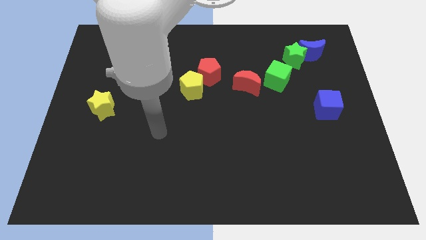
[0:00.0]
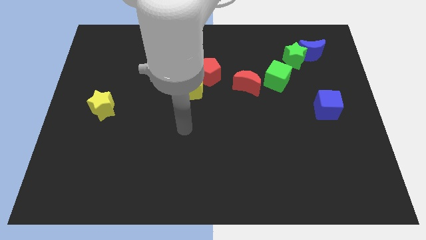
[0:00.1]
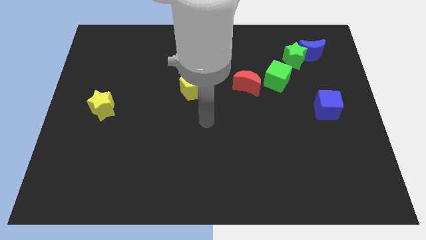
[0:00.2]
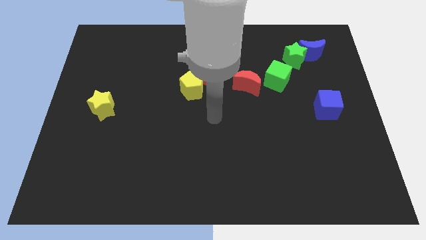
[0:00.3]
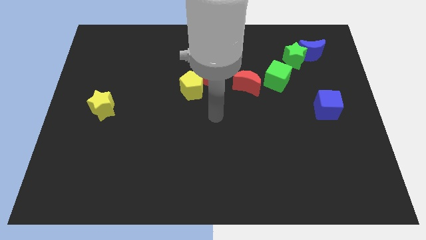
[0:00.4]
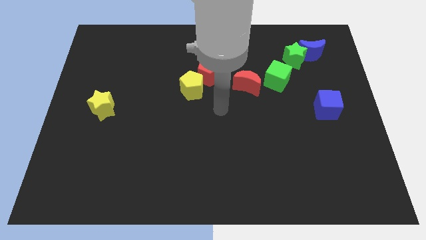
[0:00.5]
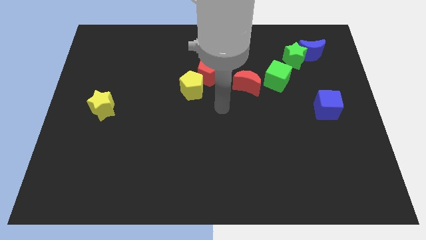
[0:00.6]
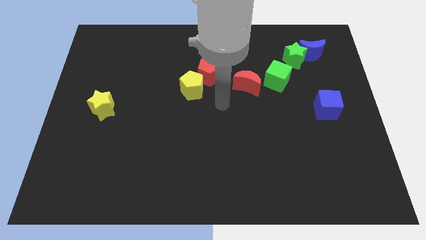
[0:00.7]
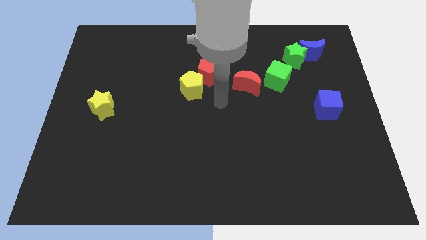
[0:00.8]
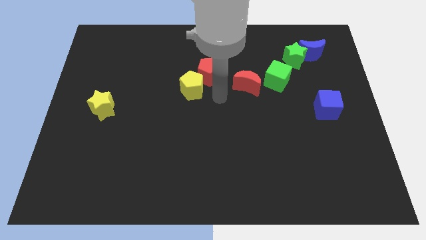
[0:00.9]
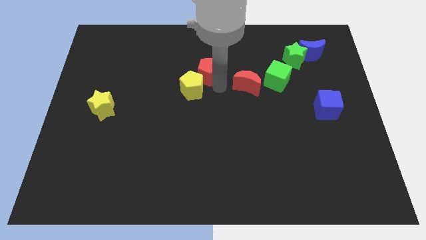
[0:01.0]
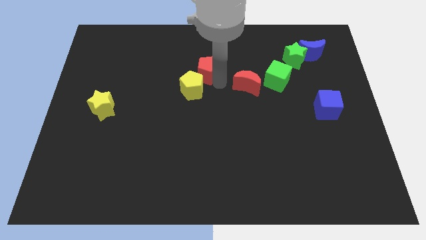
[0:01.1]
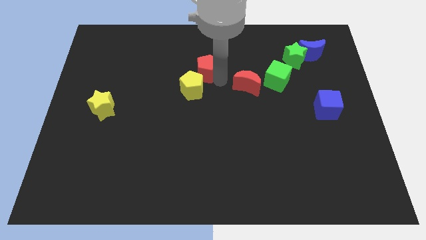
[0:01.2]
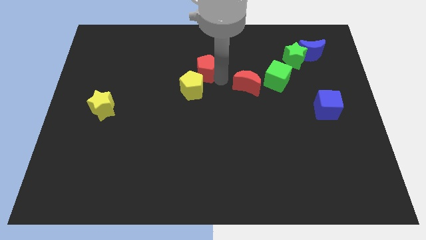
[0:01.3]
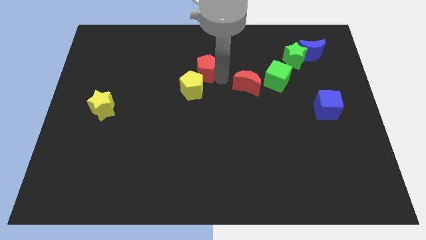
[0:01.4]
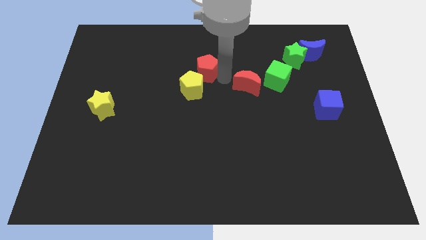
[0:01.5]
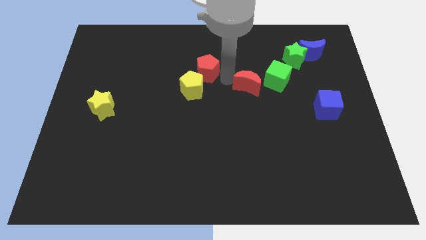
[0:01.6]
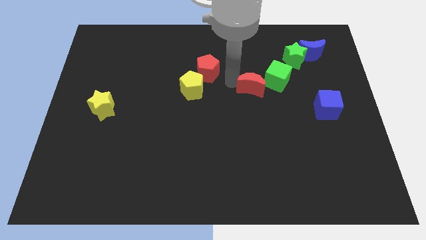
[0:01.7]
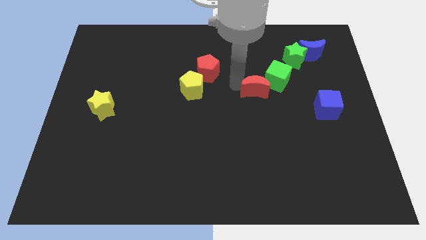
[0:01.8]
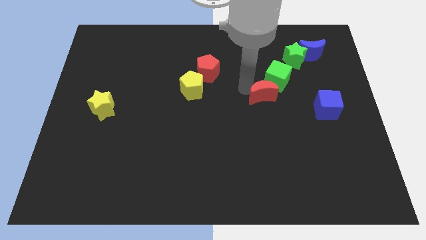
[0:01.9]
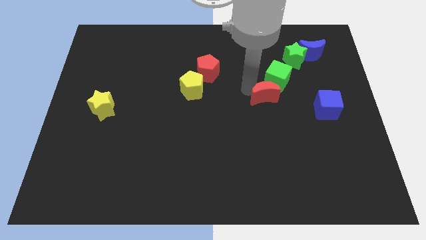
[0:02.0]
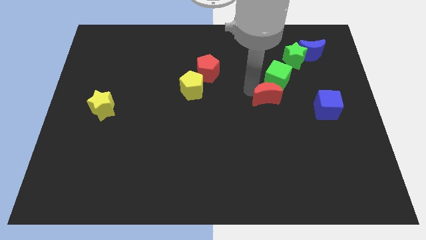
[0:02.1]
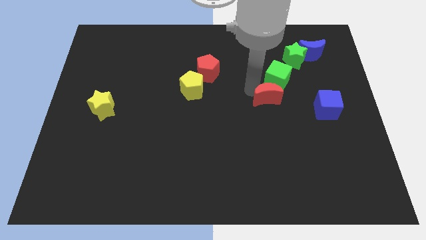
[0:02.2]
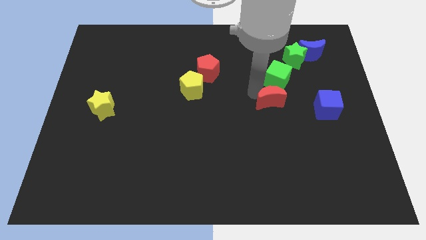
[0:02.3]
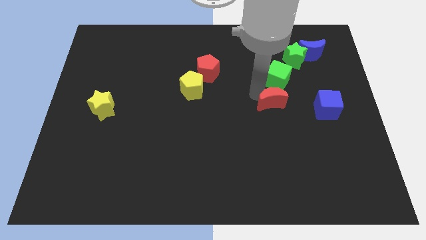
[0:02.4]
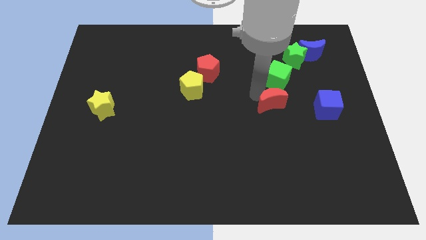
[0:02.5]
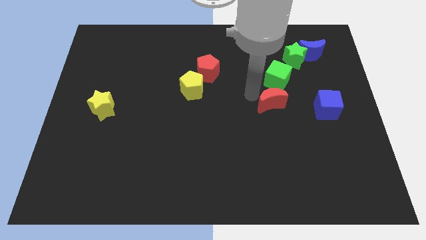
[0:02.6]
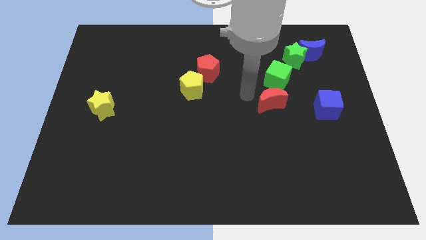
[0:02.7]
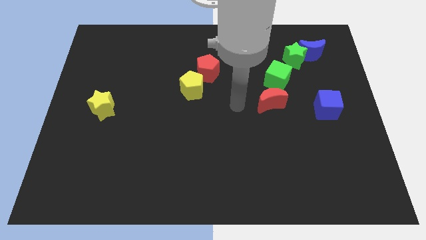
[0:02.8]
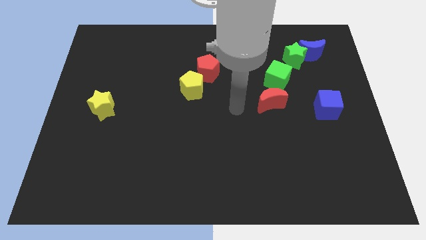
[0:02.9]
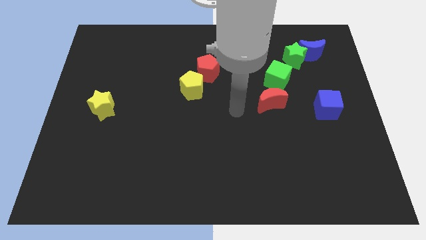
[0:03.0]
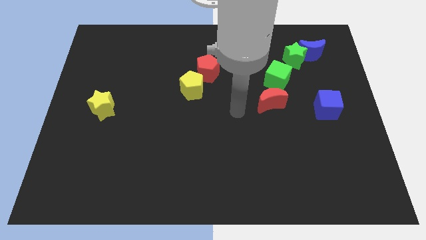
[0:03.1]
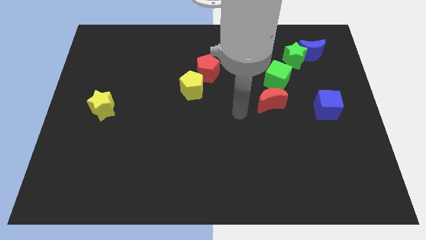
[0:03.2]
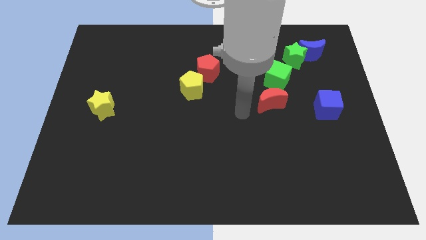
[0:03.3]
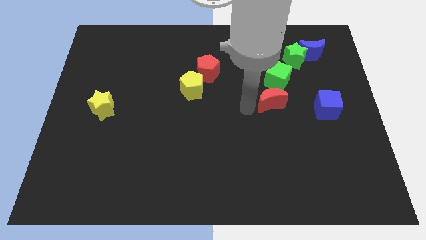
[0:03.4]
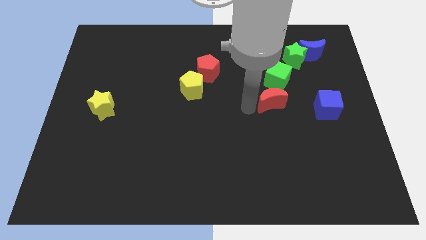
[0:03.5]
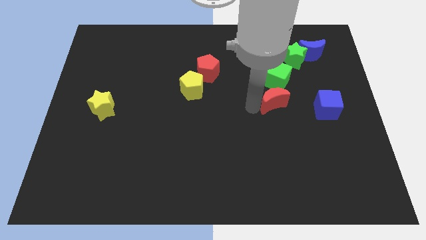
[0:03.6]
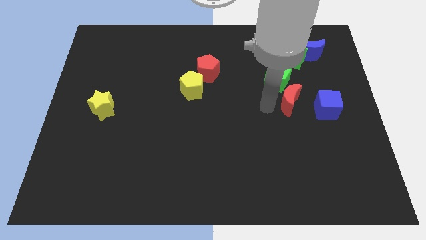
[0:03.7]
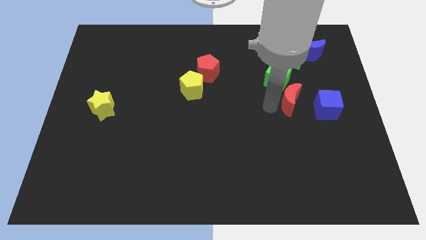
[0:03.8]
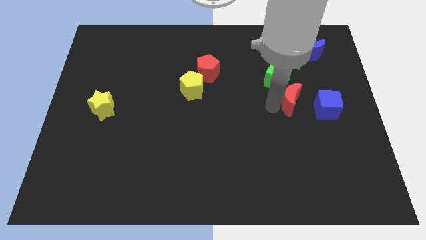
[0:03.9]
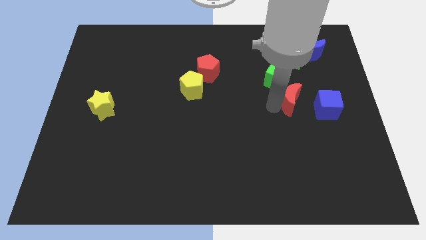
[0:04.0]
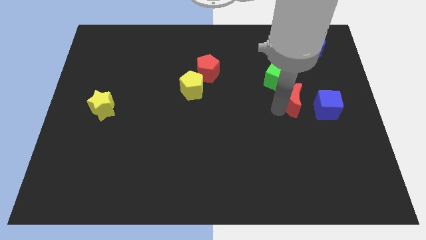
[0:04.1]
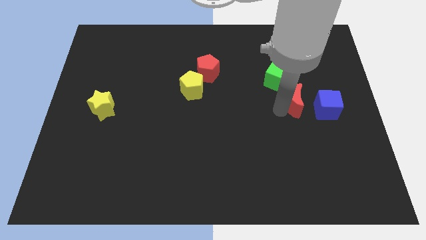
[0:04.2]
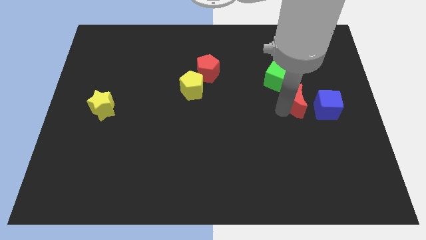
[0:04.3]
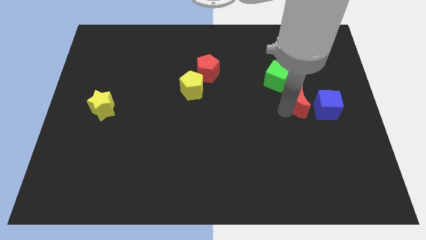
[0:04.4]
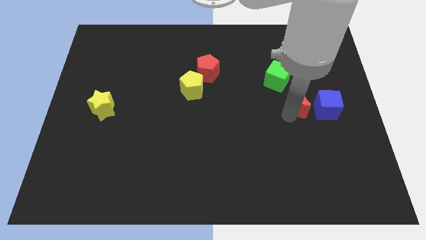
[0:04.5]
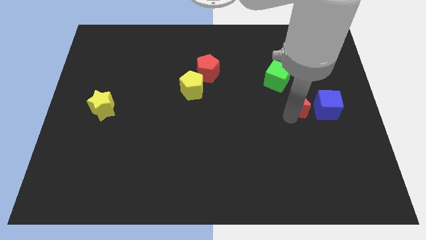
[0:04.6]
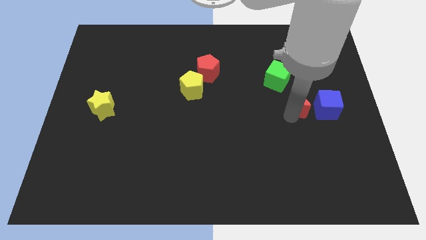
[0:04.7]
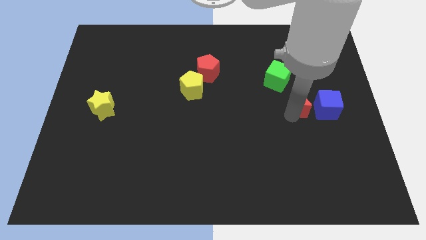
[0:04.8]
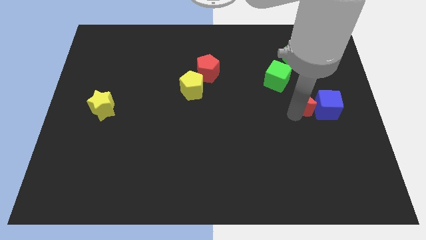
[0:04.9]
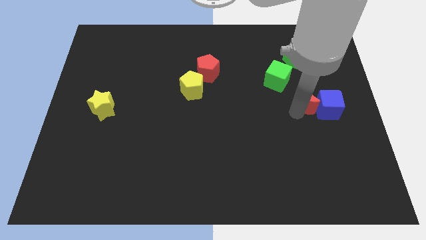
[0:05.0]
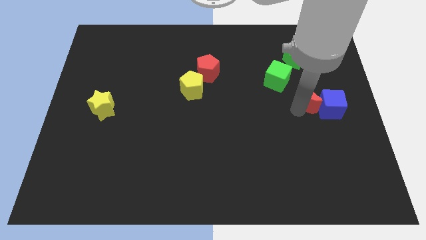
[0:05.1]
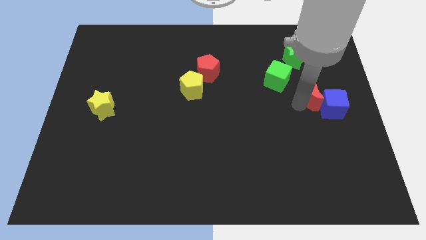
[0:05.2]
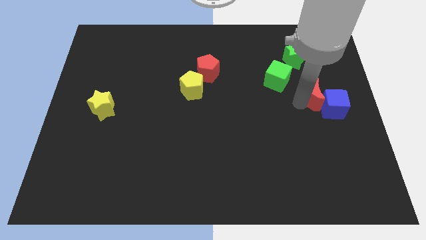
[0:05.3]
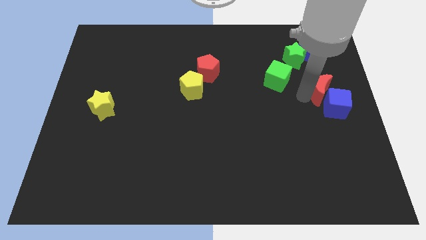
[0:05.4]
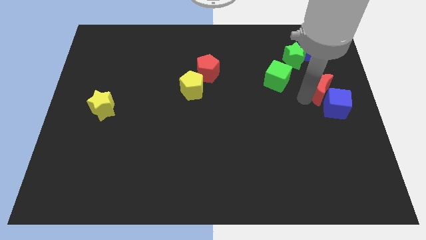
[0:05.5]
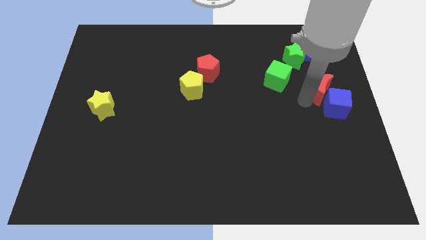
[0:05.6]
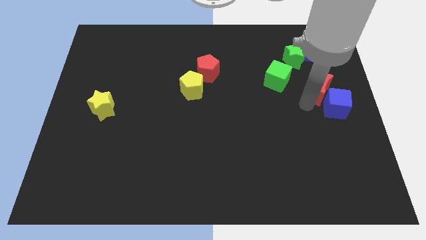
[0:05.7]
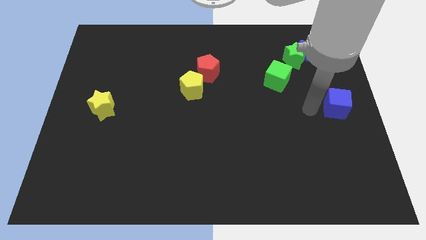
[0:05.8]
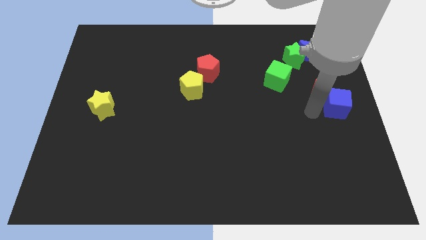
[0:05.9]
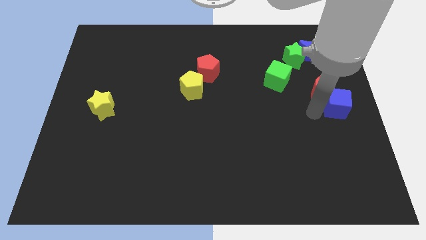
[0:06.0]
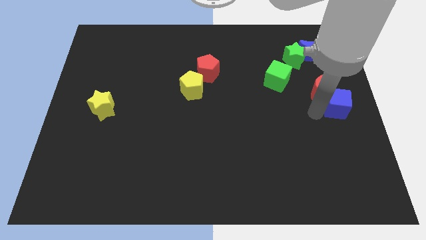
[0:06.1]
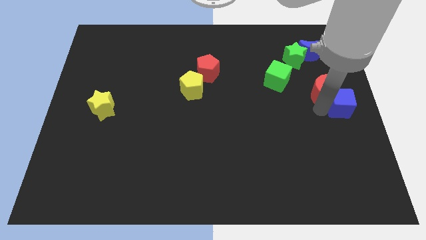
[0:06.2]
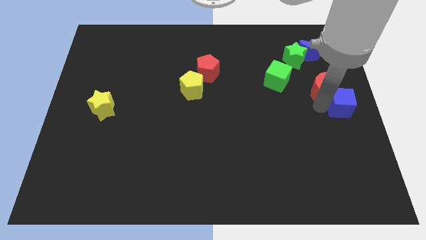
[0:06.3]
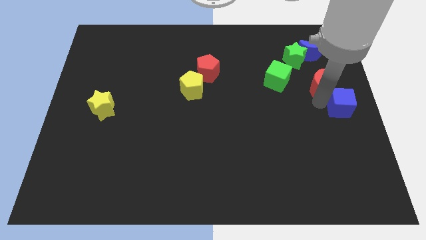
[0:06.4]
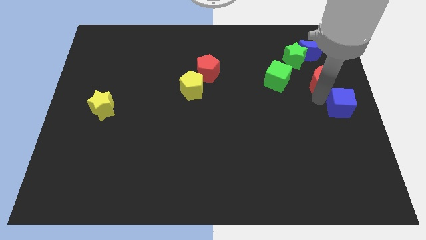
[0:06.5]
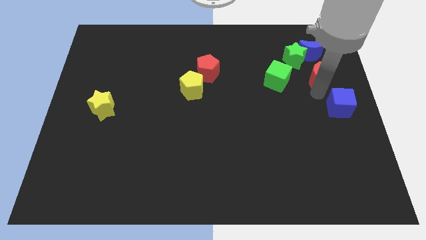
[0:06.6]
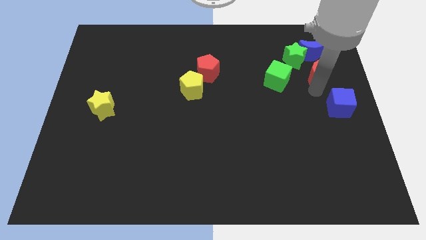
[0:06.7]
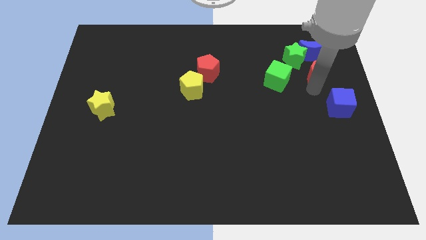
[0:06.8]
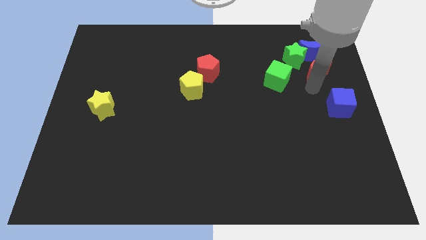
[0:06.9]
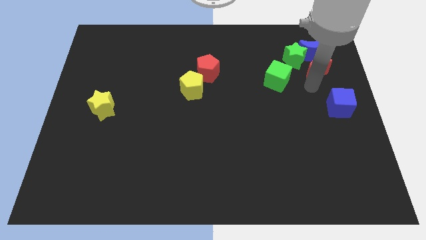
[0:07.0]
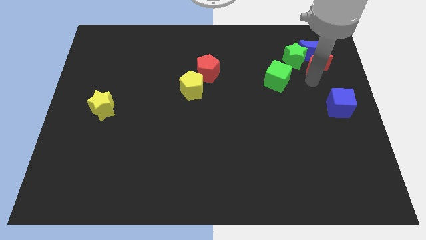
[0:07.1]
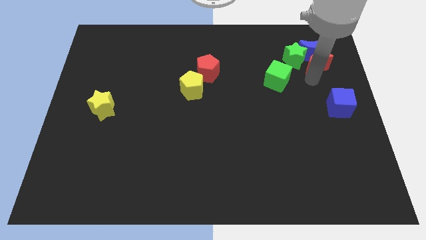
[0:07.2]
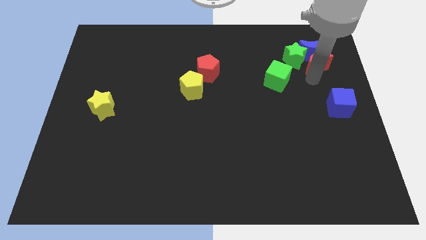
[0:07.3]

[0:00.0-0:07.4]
slide the red moon next to the blue moon

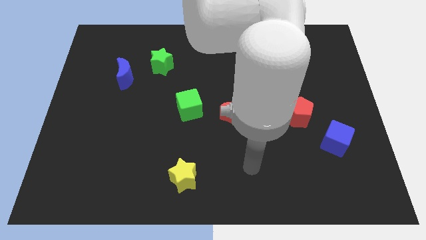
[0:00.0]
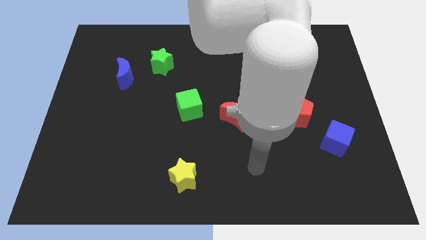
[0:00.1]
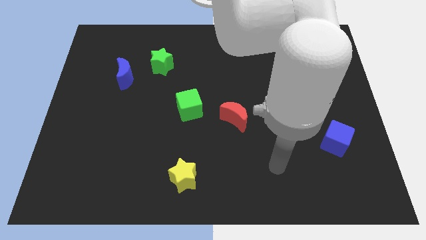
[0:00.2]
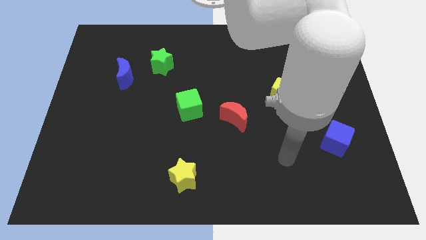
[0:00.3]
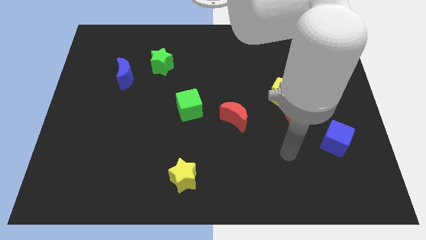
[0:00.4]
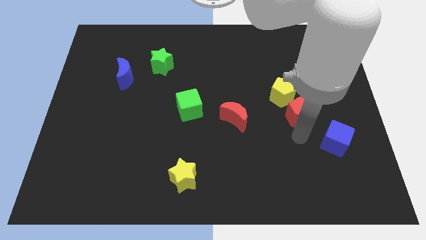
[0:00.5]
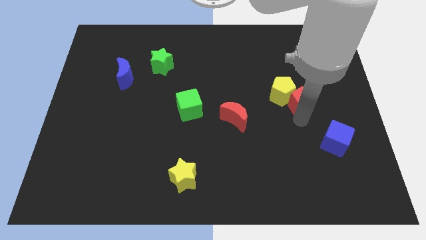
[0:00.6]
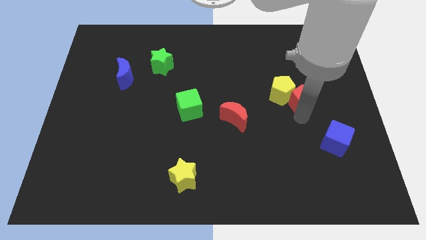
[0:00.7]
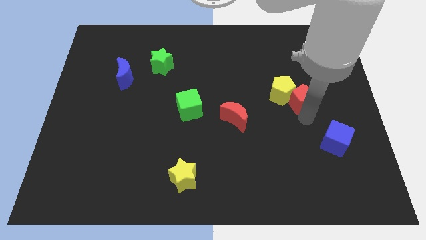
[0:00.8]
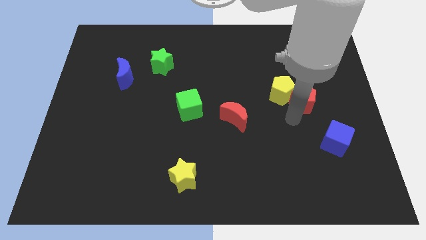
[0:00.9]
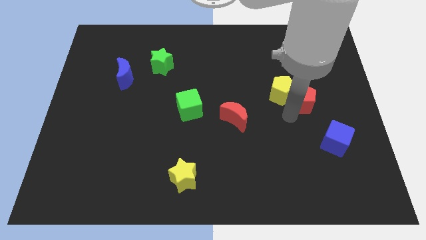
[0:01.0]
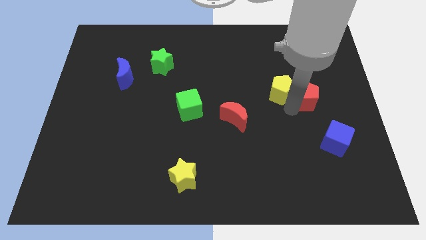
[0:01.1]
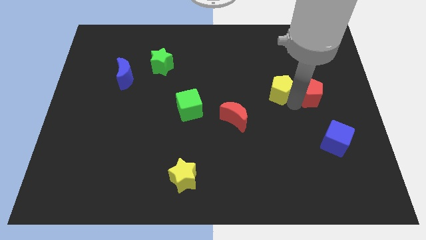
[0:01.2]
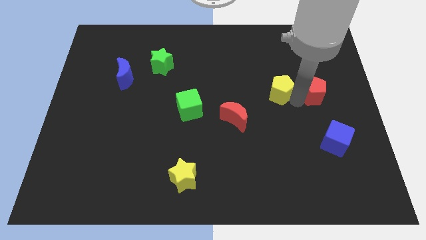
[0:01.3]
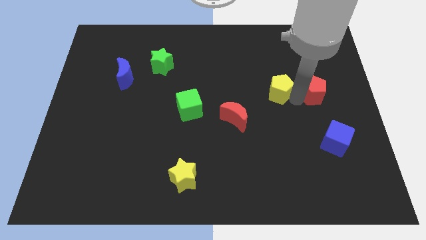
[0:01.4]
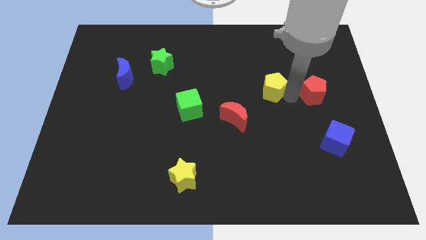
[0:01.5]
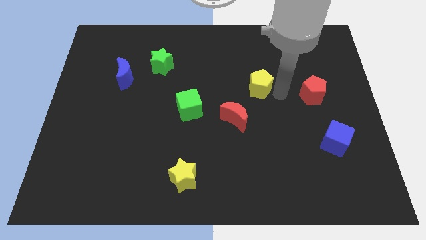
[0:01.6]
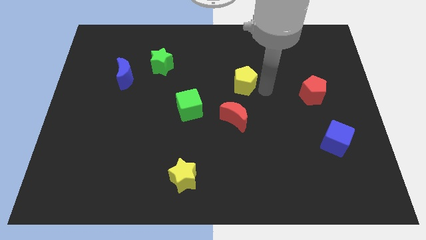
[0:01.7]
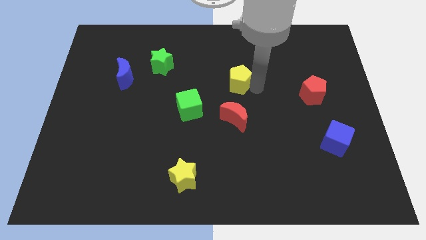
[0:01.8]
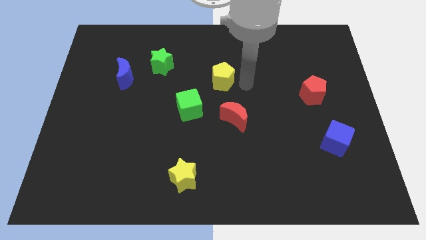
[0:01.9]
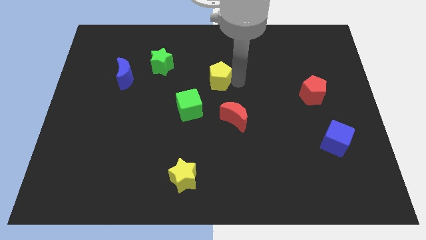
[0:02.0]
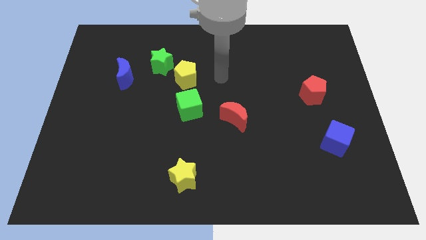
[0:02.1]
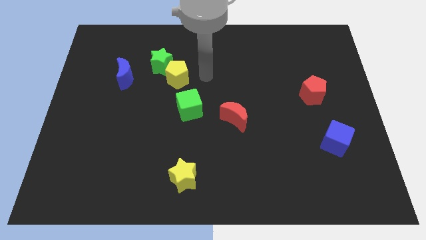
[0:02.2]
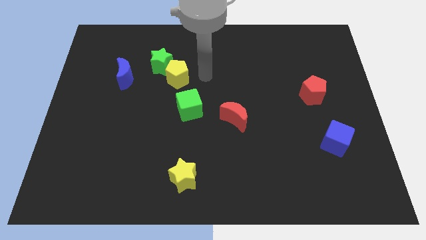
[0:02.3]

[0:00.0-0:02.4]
push the yellow pentagon to the green star
